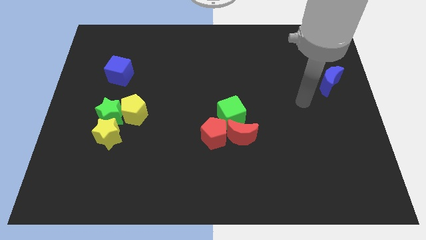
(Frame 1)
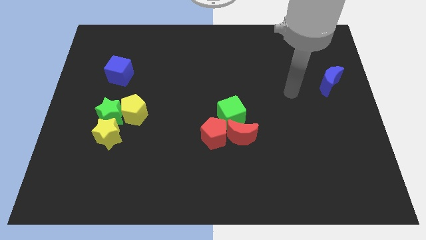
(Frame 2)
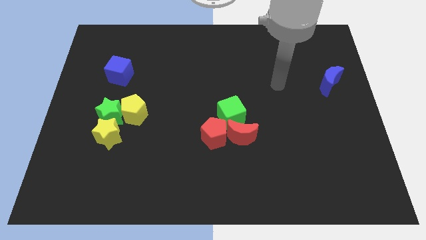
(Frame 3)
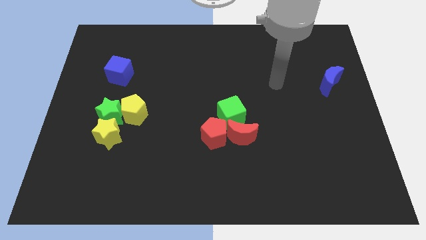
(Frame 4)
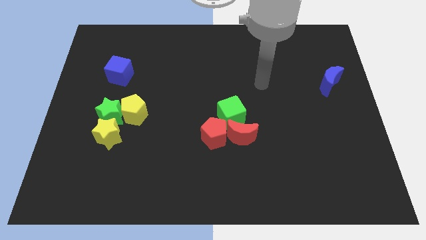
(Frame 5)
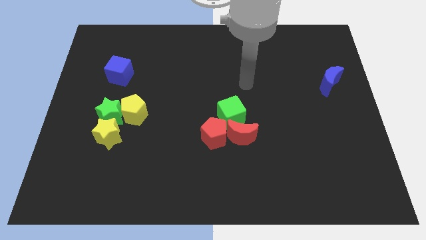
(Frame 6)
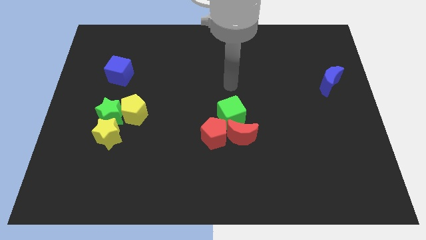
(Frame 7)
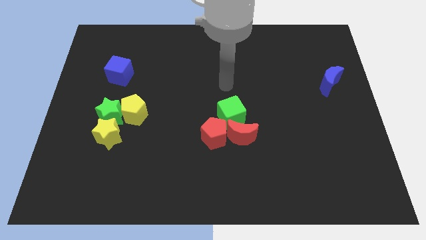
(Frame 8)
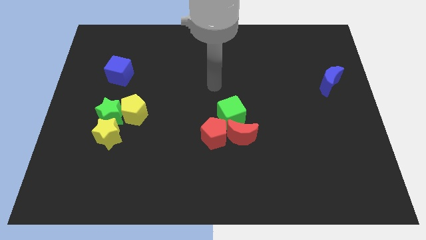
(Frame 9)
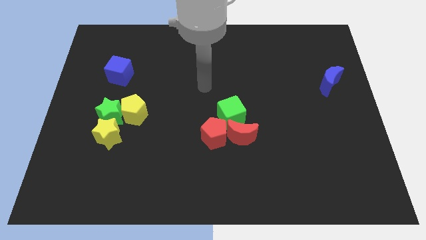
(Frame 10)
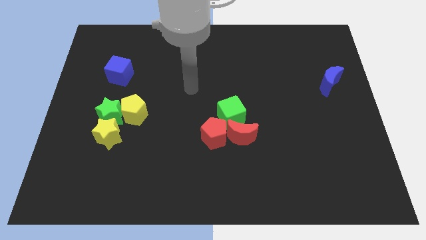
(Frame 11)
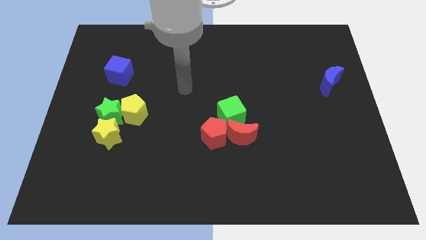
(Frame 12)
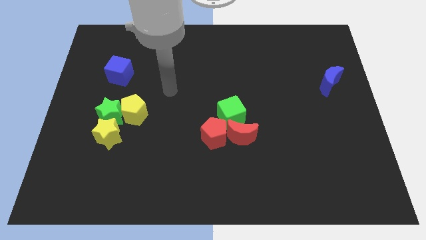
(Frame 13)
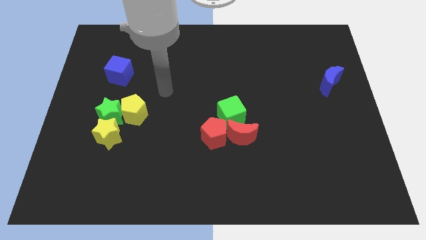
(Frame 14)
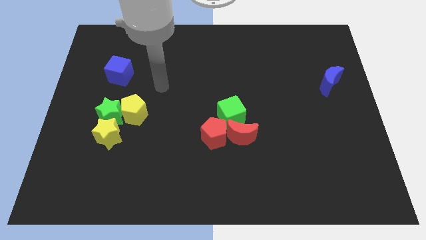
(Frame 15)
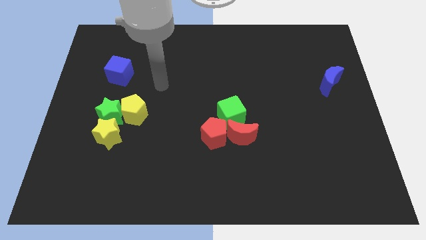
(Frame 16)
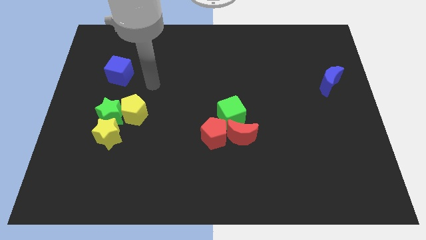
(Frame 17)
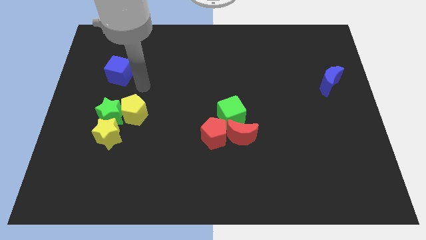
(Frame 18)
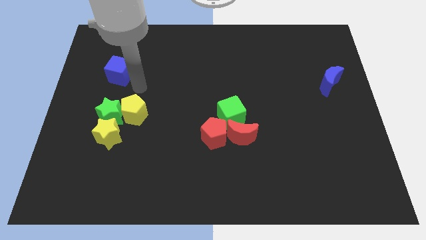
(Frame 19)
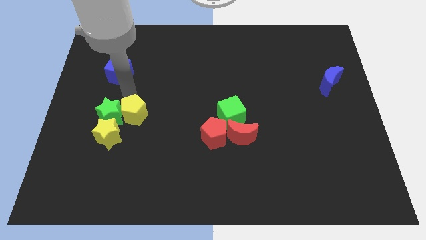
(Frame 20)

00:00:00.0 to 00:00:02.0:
place your arm to the top of the yellow pentagon

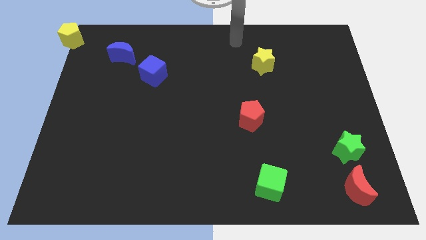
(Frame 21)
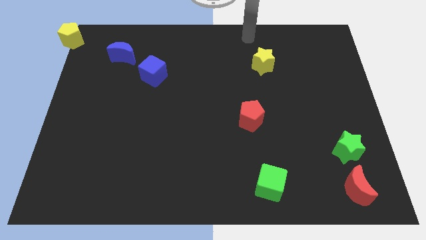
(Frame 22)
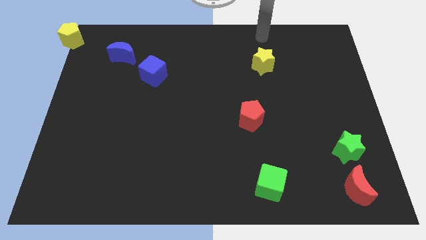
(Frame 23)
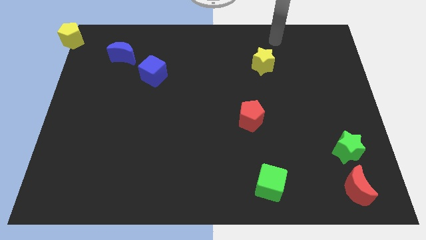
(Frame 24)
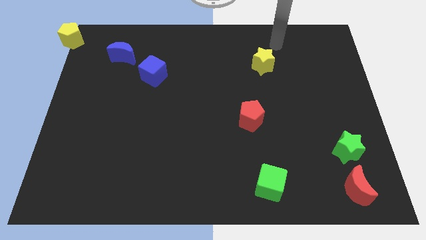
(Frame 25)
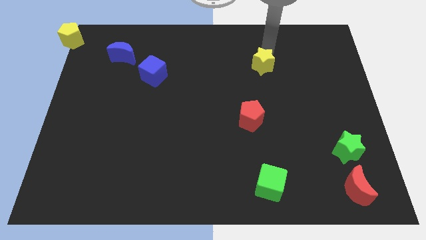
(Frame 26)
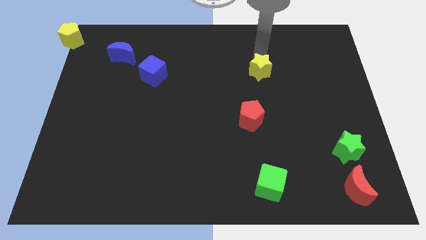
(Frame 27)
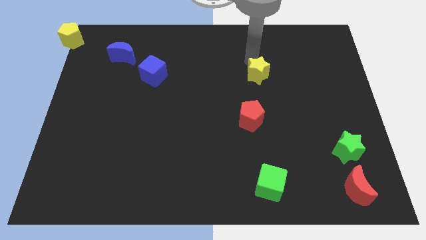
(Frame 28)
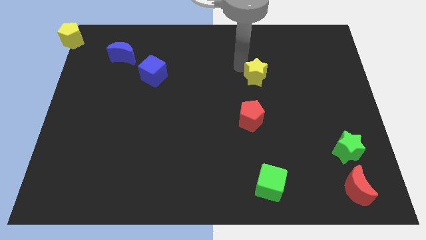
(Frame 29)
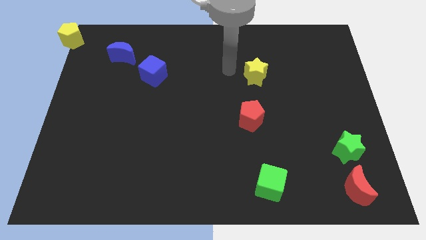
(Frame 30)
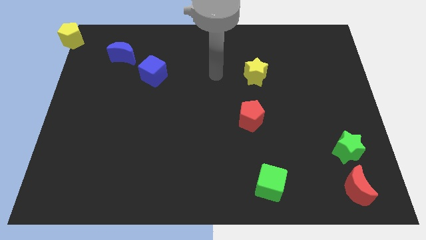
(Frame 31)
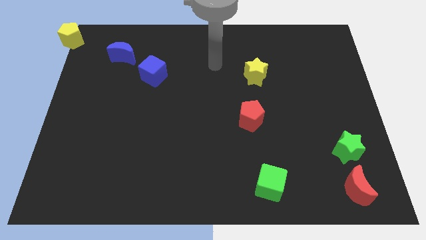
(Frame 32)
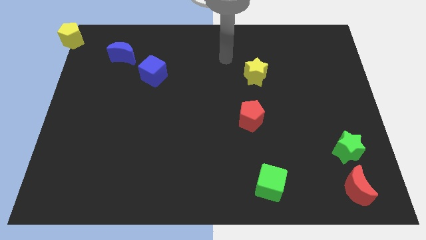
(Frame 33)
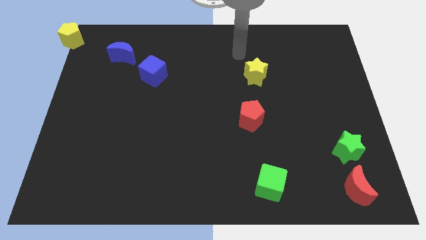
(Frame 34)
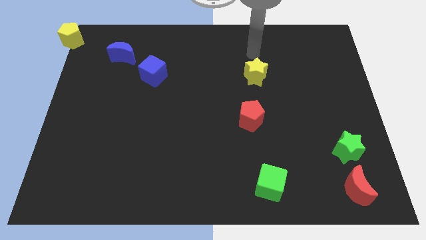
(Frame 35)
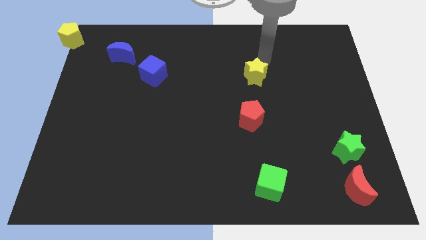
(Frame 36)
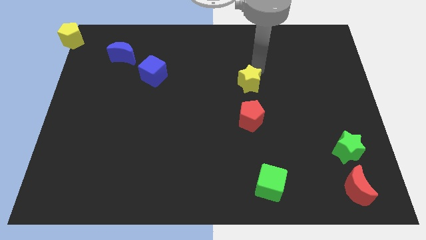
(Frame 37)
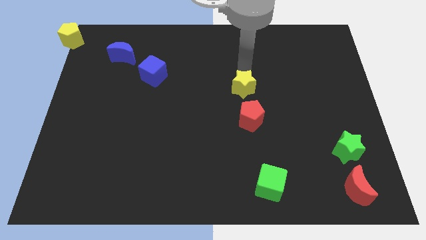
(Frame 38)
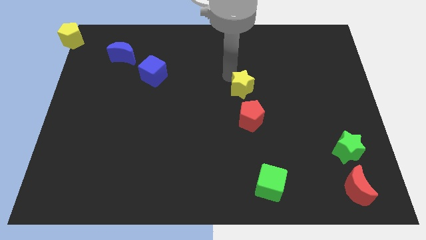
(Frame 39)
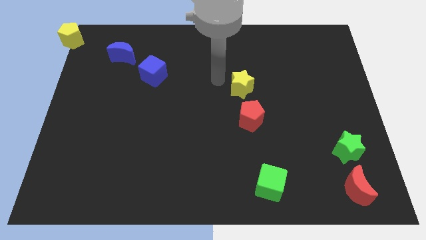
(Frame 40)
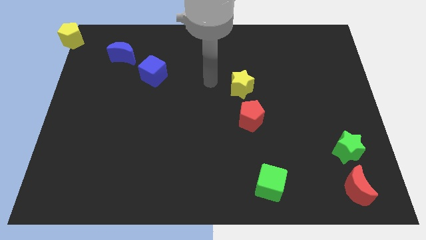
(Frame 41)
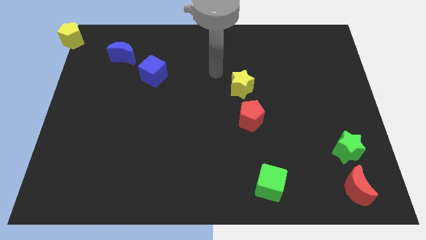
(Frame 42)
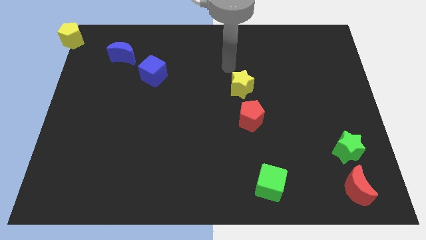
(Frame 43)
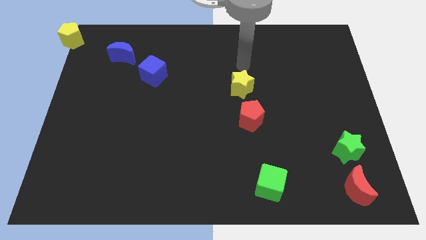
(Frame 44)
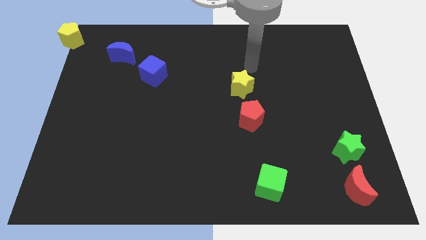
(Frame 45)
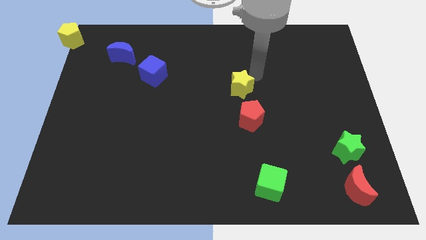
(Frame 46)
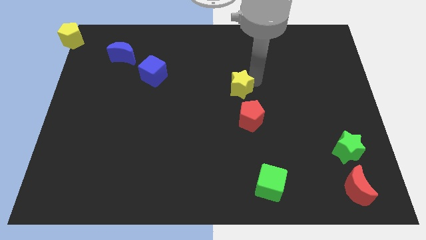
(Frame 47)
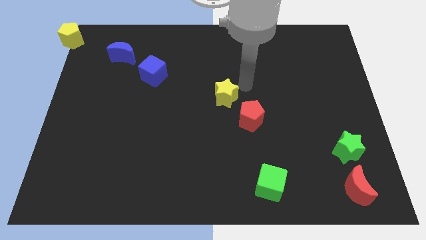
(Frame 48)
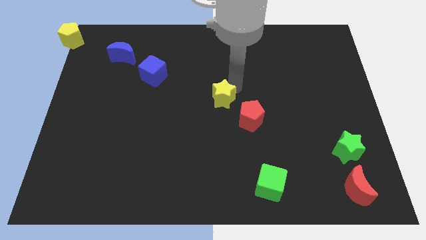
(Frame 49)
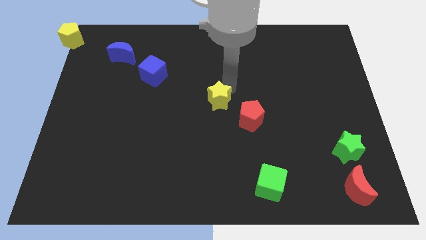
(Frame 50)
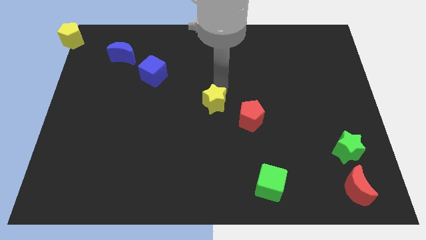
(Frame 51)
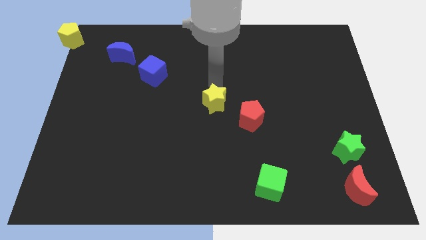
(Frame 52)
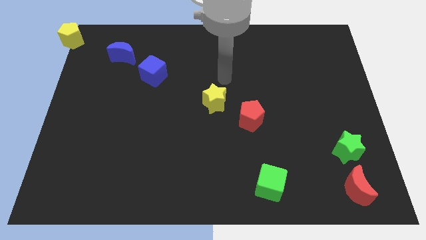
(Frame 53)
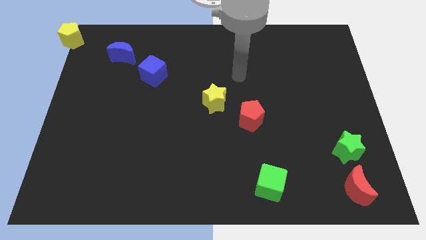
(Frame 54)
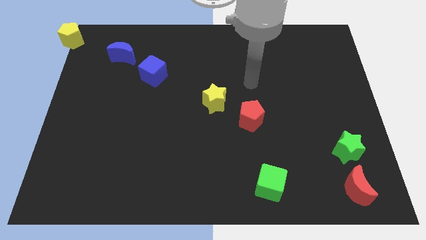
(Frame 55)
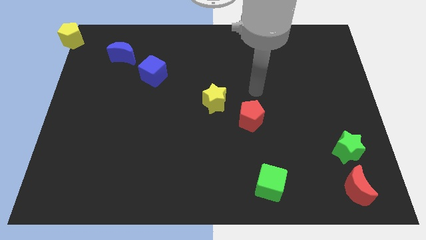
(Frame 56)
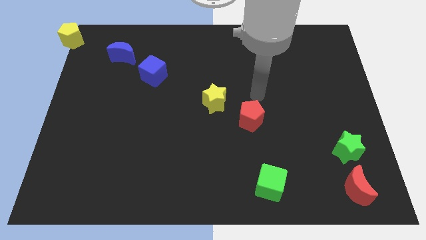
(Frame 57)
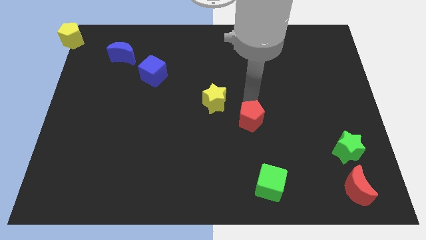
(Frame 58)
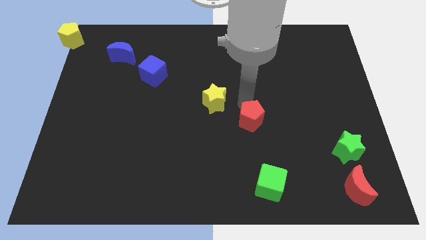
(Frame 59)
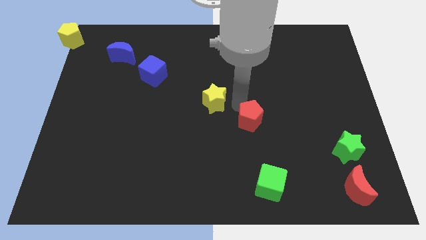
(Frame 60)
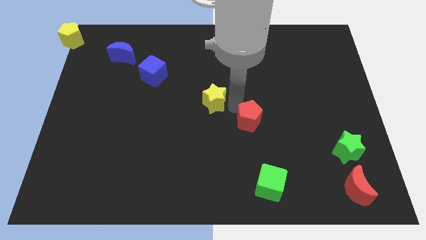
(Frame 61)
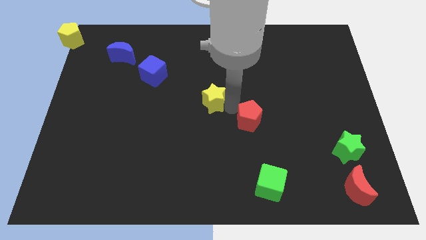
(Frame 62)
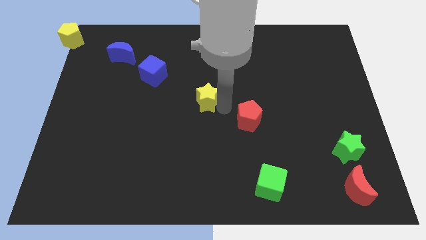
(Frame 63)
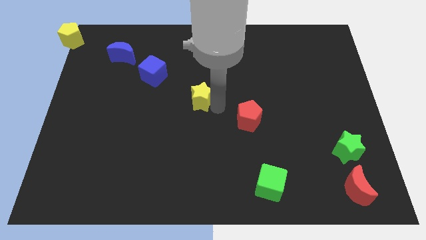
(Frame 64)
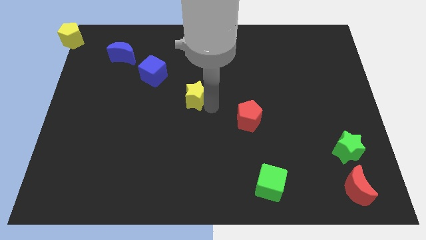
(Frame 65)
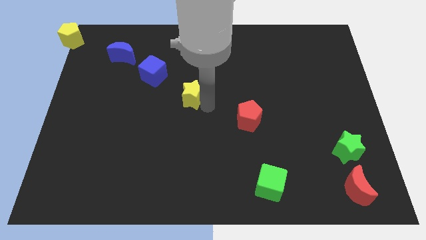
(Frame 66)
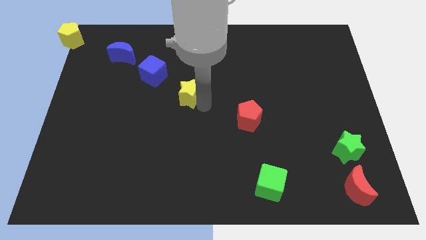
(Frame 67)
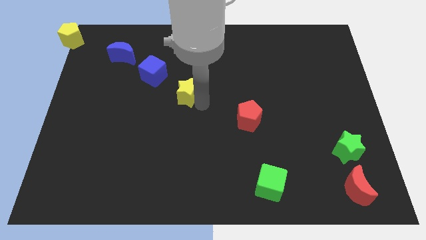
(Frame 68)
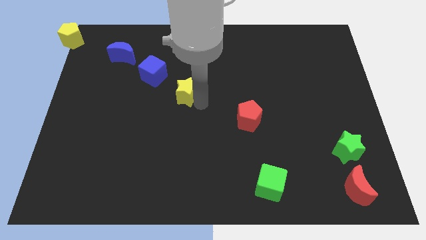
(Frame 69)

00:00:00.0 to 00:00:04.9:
add the yellow star down to the blue square

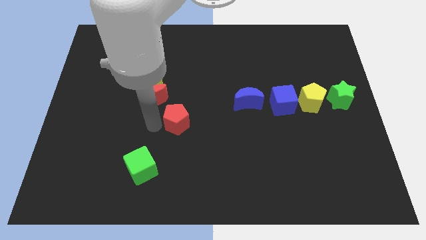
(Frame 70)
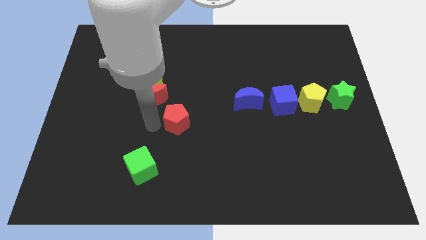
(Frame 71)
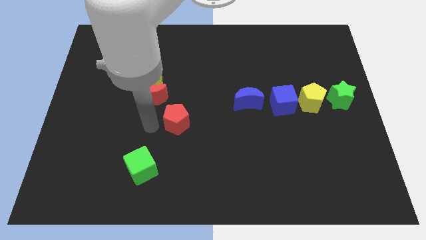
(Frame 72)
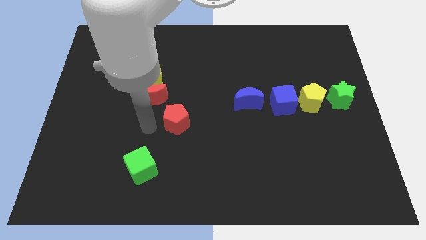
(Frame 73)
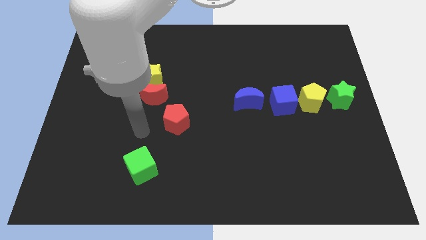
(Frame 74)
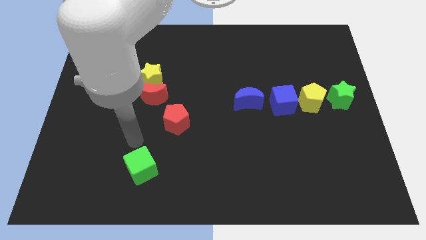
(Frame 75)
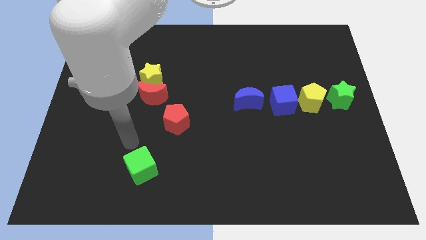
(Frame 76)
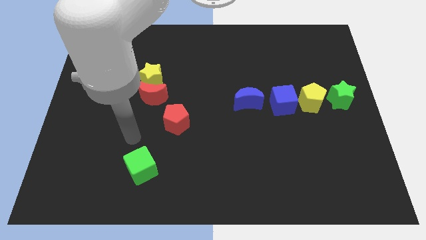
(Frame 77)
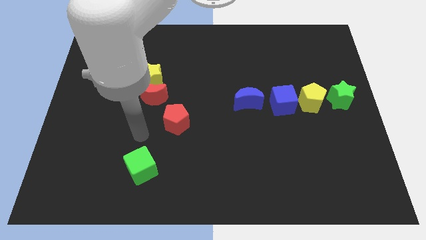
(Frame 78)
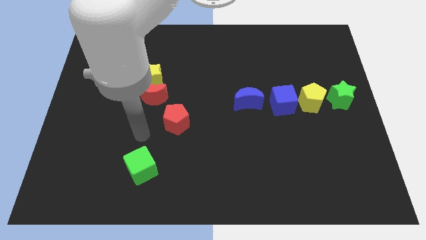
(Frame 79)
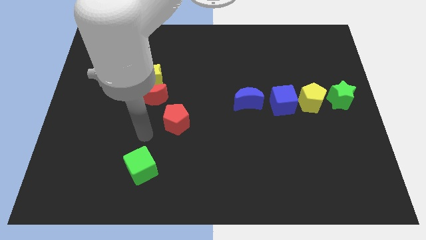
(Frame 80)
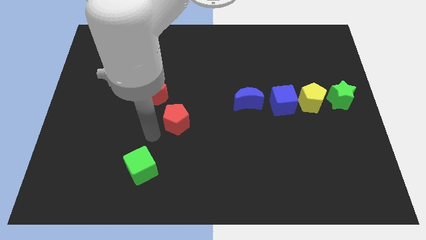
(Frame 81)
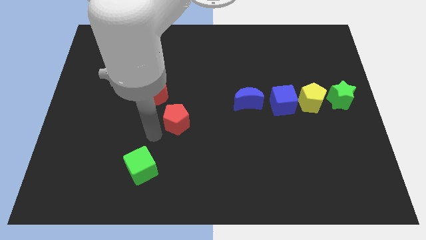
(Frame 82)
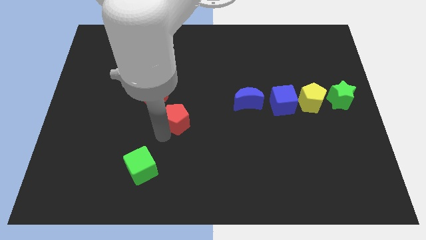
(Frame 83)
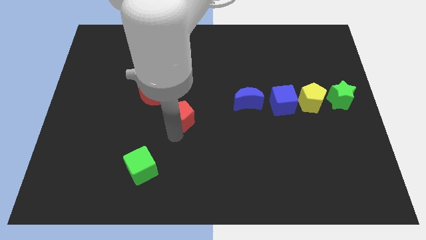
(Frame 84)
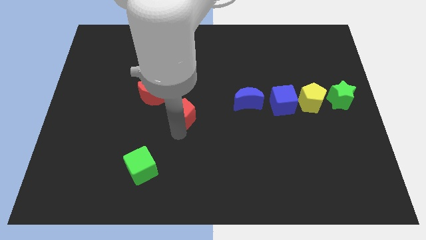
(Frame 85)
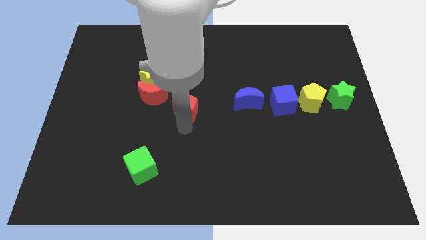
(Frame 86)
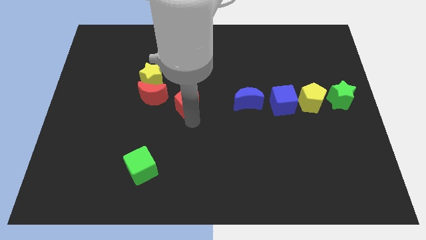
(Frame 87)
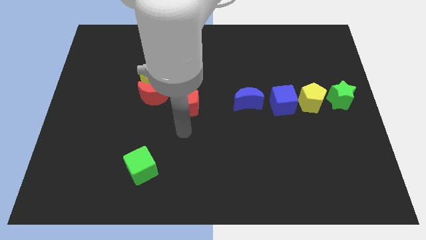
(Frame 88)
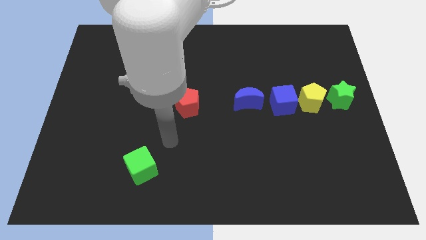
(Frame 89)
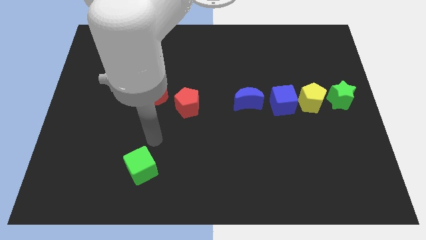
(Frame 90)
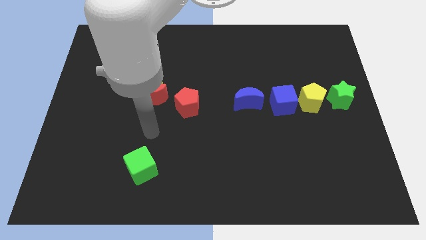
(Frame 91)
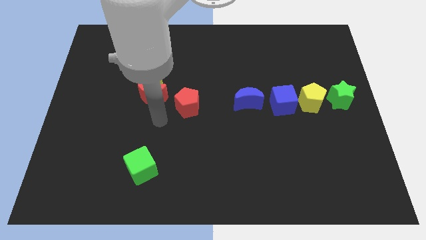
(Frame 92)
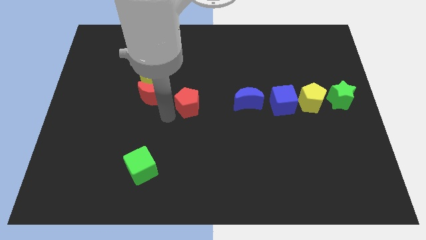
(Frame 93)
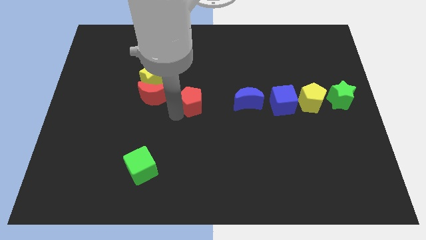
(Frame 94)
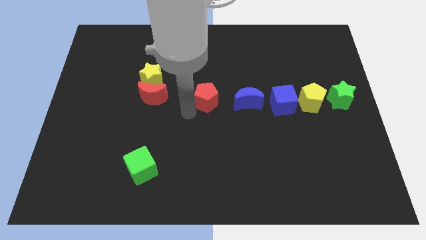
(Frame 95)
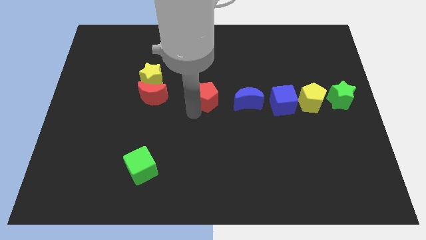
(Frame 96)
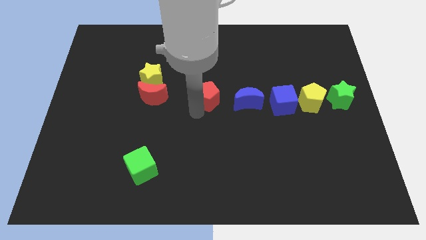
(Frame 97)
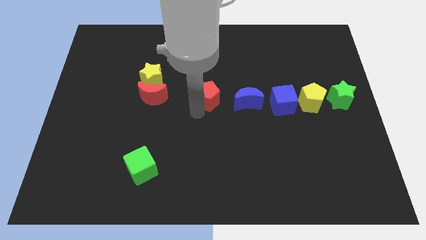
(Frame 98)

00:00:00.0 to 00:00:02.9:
place the red pentagon left to the blue moon
